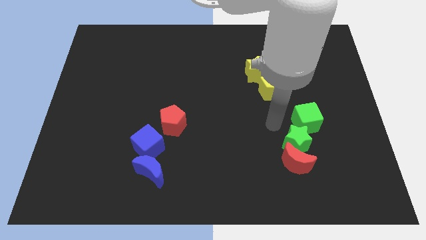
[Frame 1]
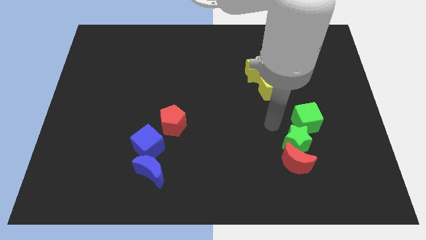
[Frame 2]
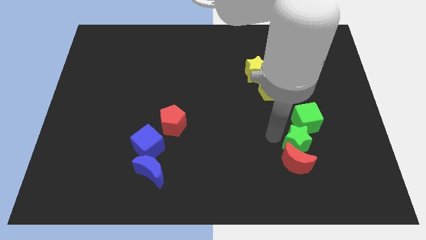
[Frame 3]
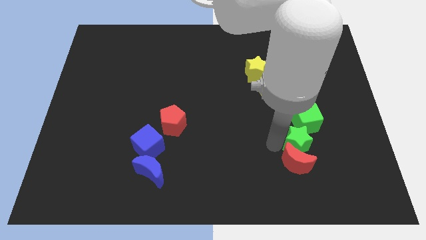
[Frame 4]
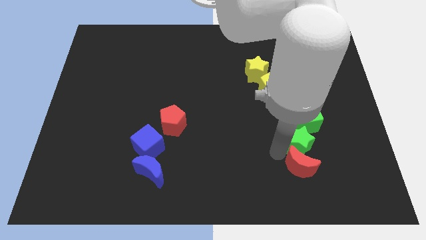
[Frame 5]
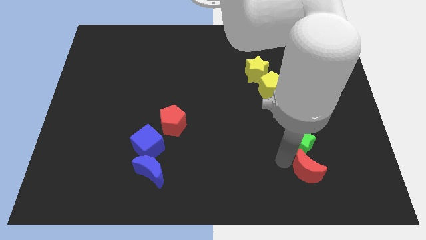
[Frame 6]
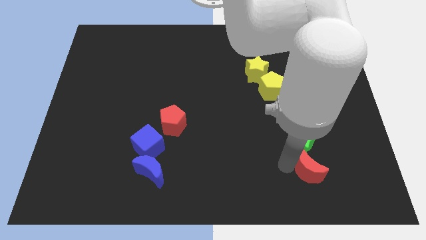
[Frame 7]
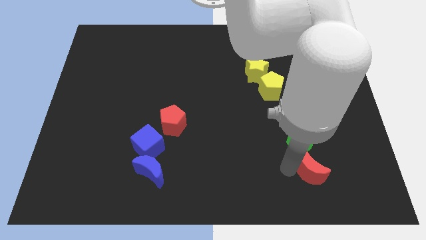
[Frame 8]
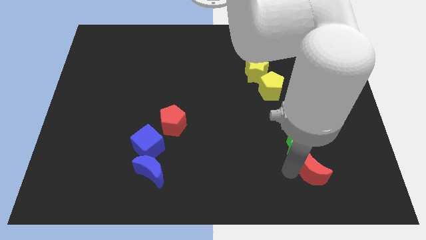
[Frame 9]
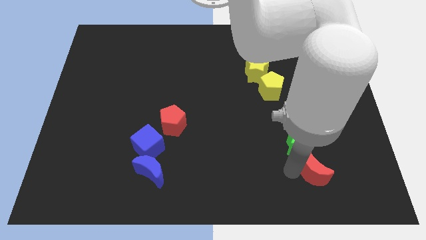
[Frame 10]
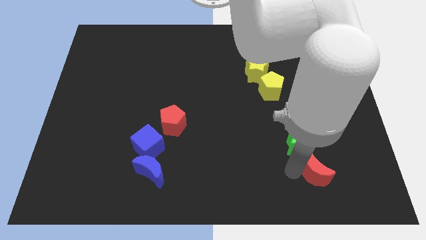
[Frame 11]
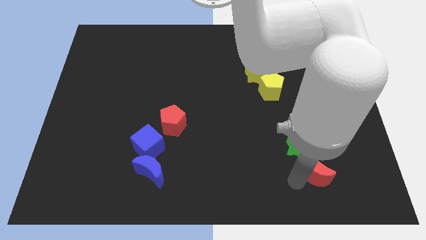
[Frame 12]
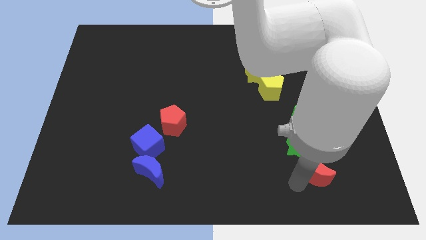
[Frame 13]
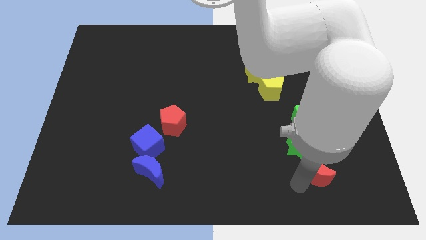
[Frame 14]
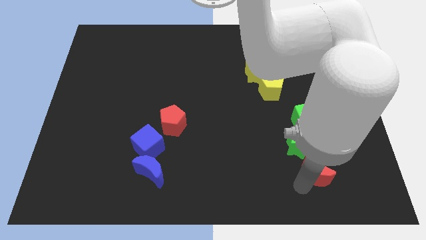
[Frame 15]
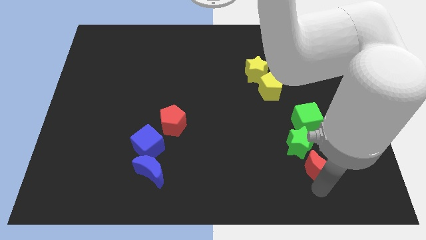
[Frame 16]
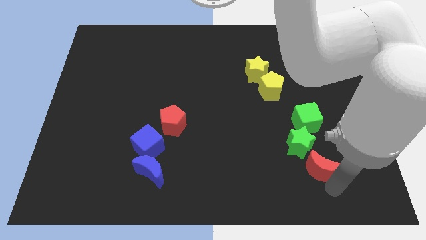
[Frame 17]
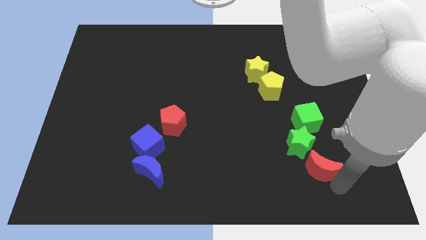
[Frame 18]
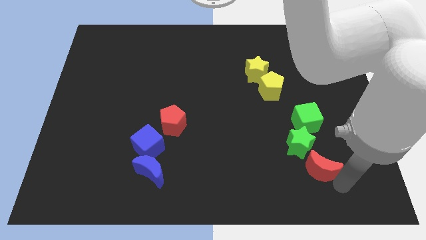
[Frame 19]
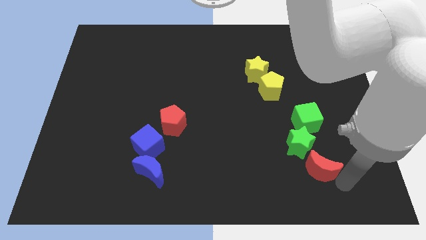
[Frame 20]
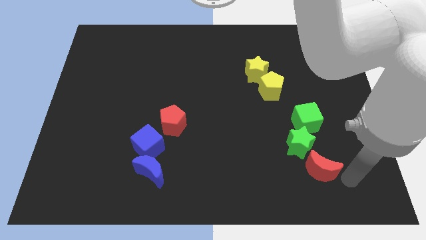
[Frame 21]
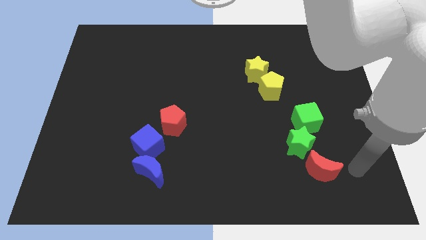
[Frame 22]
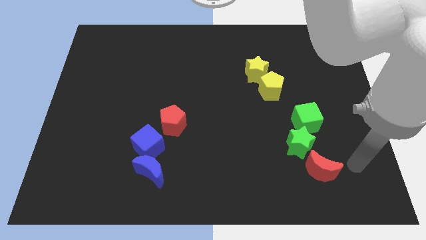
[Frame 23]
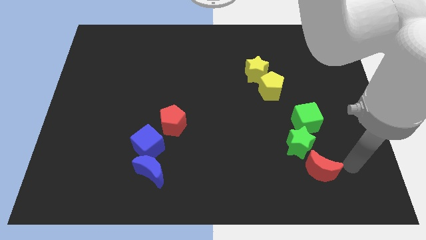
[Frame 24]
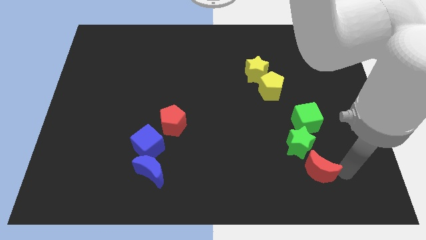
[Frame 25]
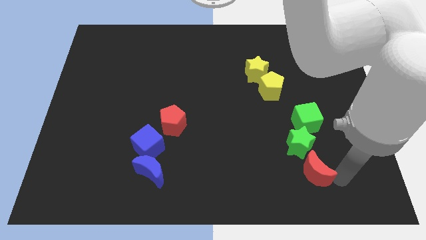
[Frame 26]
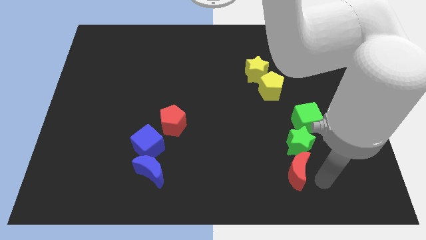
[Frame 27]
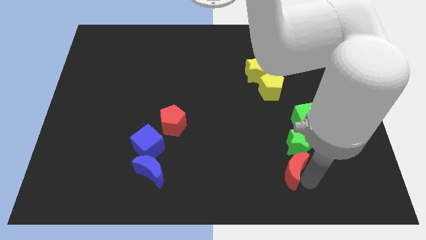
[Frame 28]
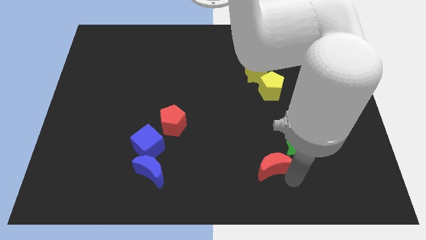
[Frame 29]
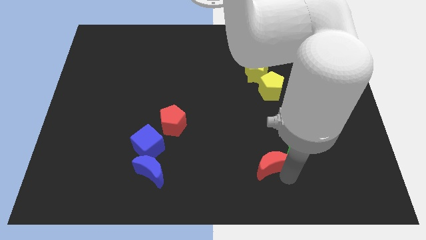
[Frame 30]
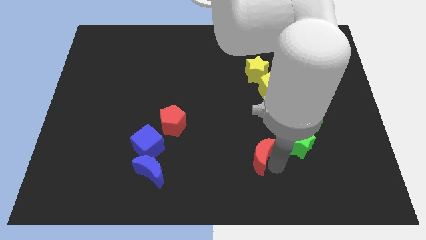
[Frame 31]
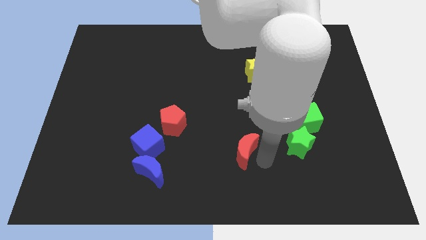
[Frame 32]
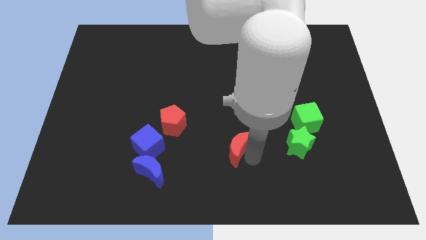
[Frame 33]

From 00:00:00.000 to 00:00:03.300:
move the red crescent to the left of the green star

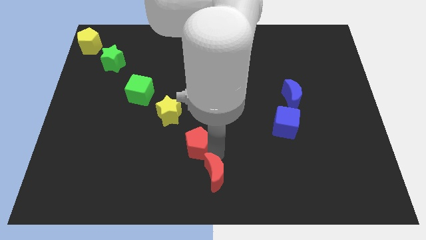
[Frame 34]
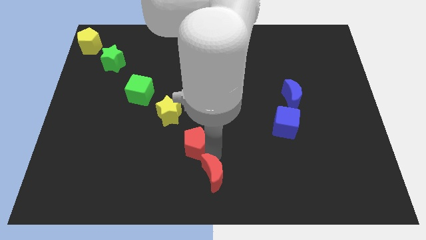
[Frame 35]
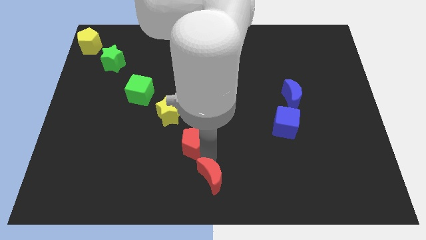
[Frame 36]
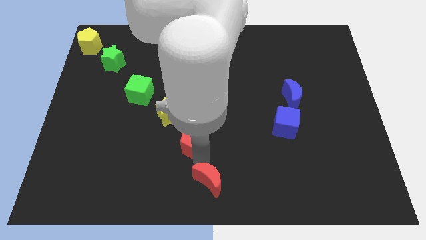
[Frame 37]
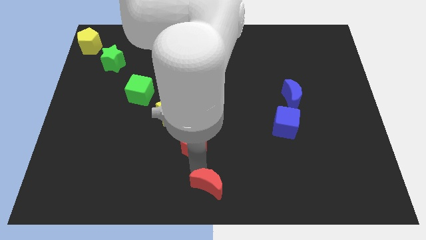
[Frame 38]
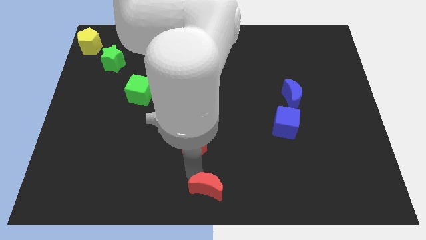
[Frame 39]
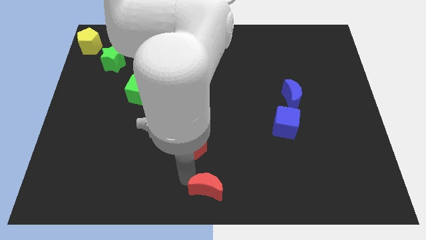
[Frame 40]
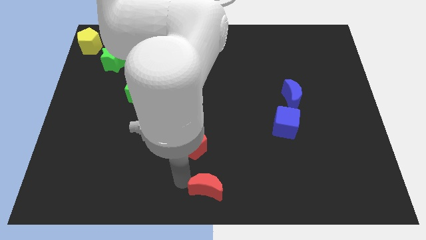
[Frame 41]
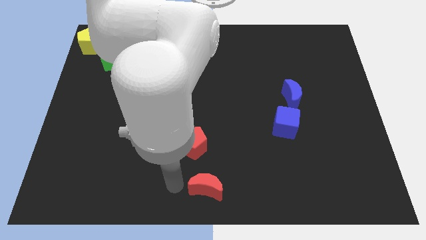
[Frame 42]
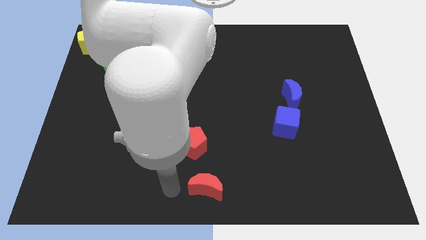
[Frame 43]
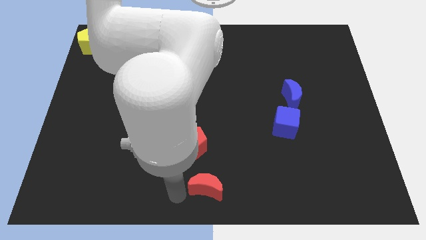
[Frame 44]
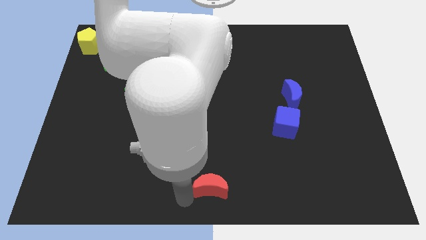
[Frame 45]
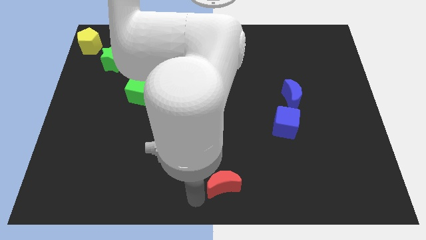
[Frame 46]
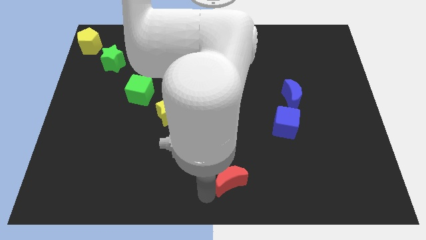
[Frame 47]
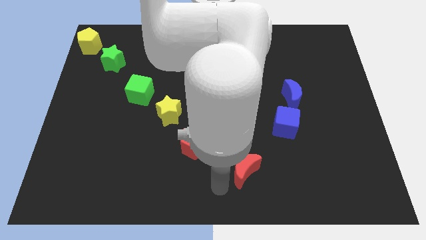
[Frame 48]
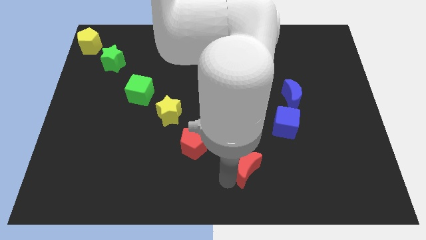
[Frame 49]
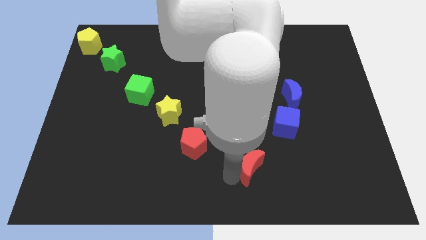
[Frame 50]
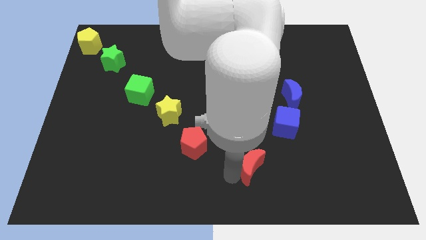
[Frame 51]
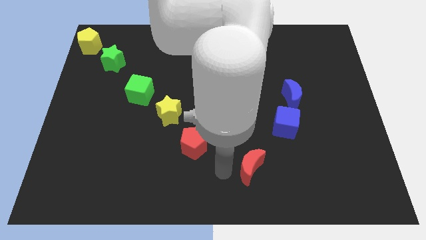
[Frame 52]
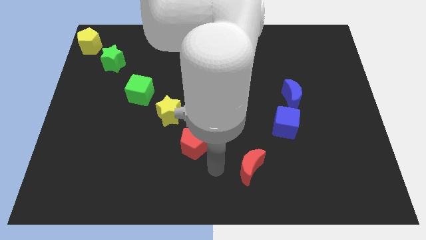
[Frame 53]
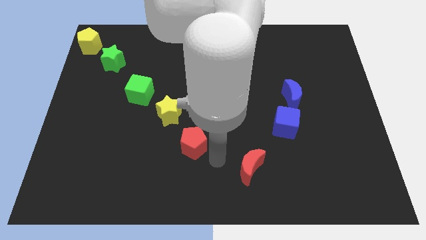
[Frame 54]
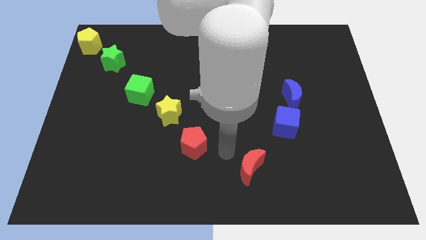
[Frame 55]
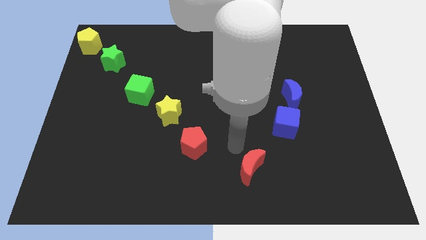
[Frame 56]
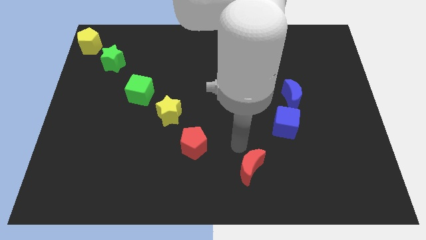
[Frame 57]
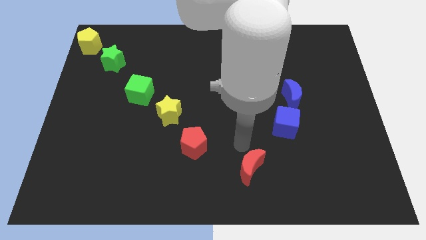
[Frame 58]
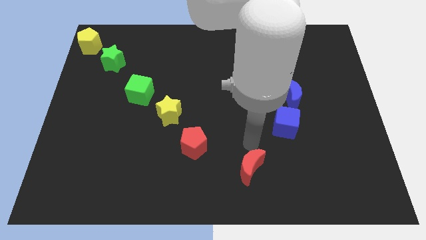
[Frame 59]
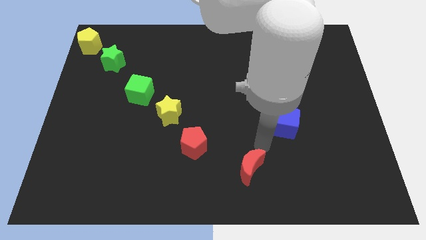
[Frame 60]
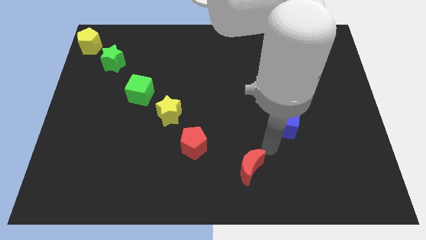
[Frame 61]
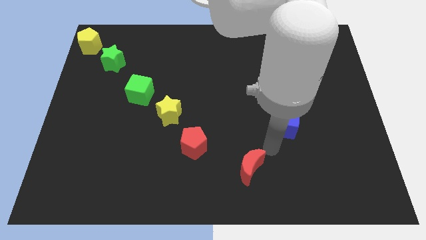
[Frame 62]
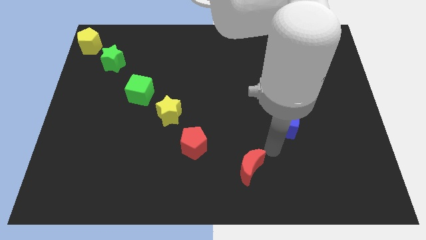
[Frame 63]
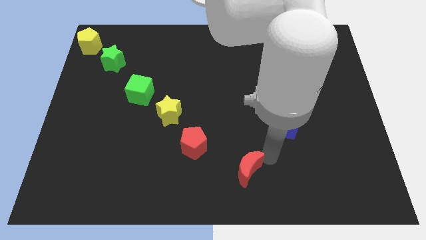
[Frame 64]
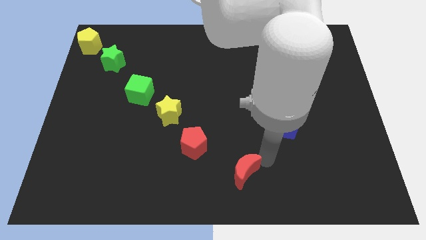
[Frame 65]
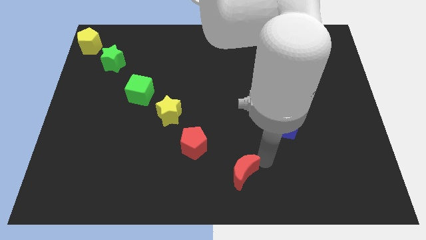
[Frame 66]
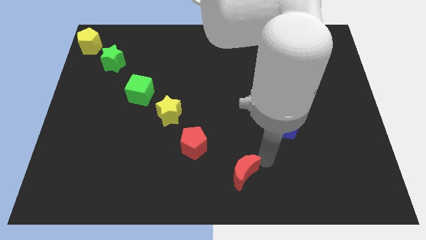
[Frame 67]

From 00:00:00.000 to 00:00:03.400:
move the red moon to the bottom center

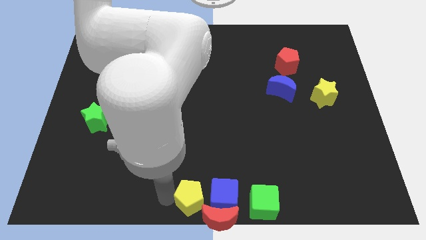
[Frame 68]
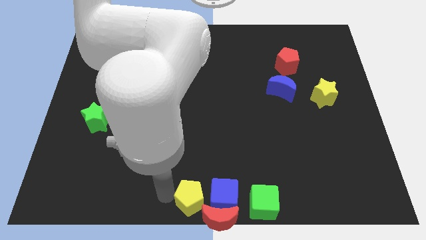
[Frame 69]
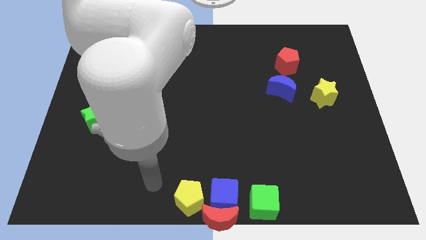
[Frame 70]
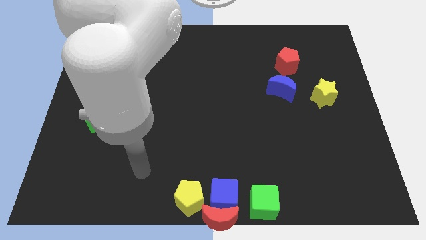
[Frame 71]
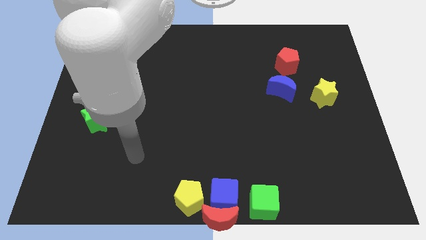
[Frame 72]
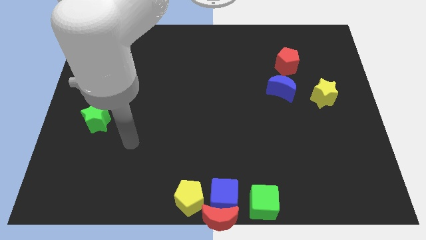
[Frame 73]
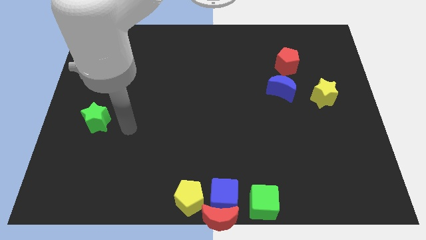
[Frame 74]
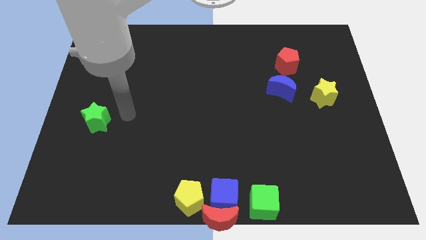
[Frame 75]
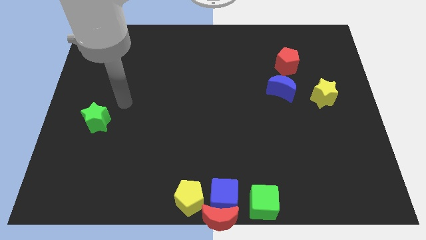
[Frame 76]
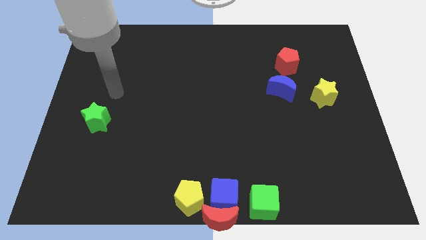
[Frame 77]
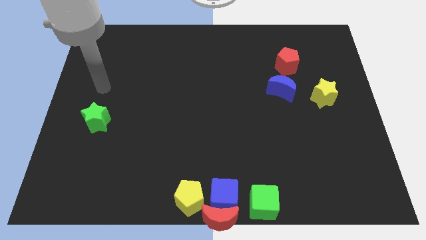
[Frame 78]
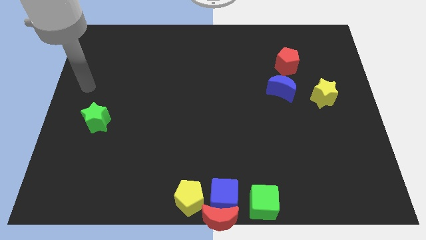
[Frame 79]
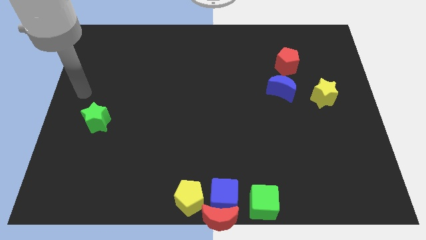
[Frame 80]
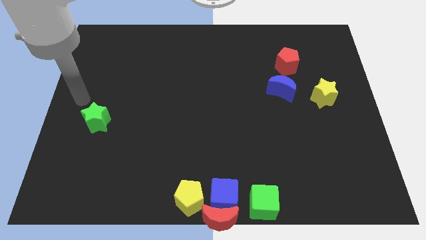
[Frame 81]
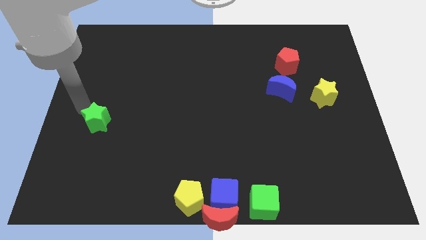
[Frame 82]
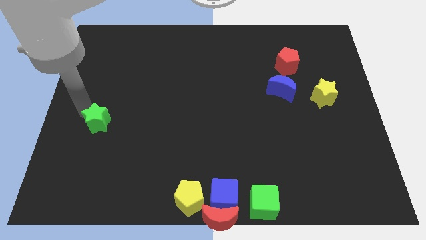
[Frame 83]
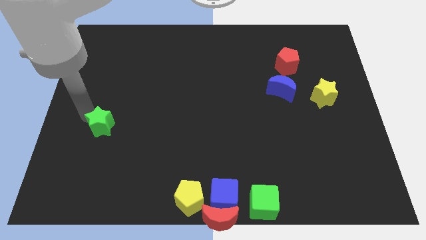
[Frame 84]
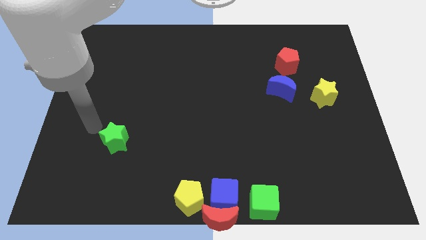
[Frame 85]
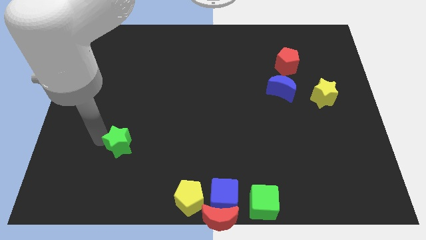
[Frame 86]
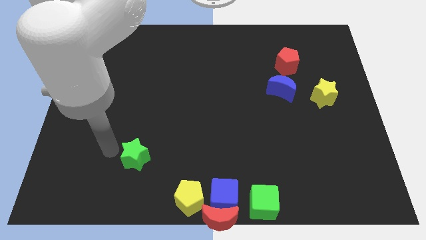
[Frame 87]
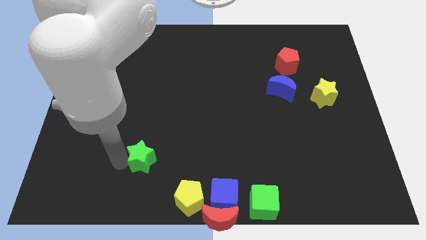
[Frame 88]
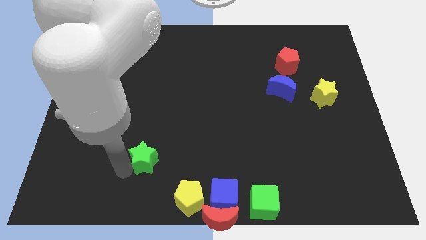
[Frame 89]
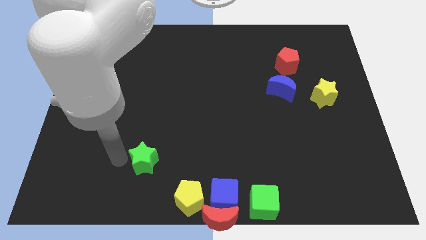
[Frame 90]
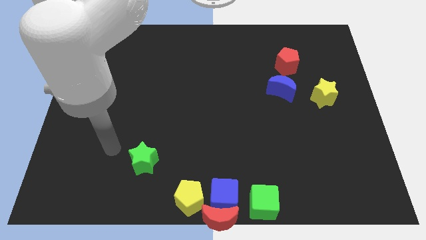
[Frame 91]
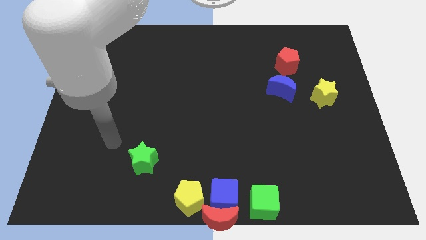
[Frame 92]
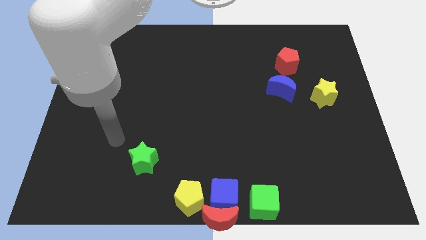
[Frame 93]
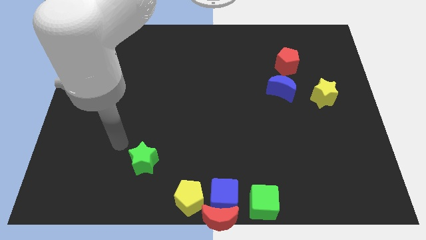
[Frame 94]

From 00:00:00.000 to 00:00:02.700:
place the green star diagonally top left to the yellow pentagon
